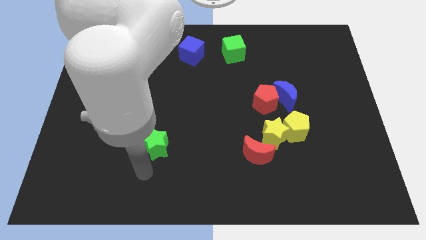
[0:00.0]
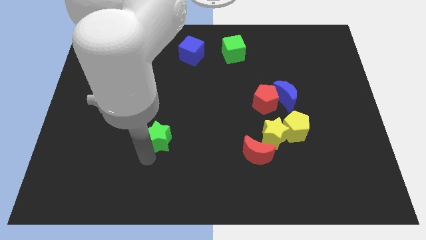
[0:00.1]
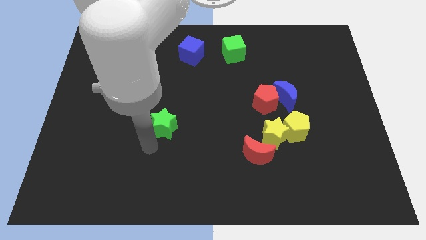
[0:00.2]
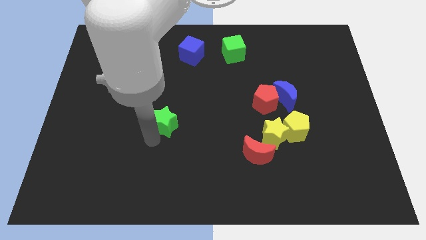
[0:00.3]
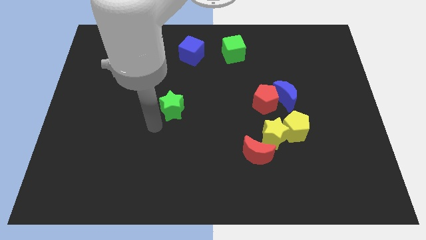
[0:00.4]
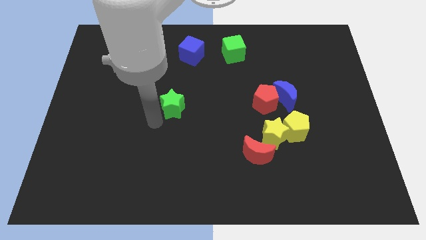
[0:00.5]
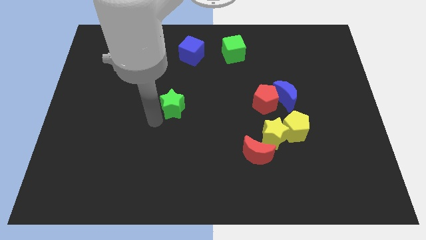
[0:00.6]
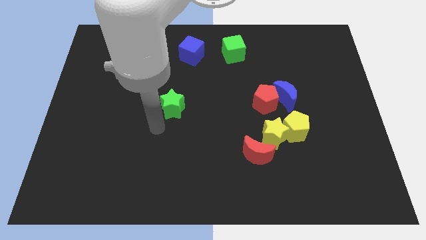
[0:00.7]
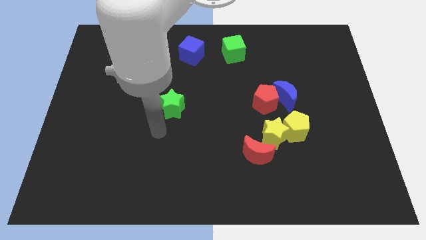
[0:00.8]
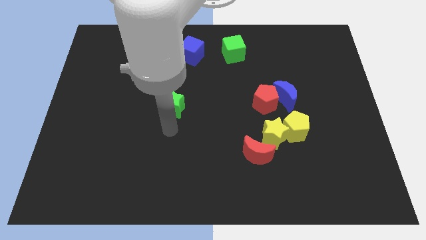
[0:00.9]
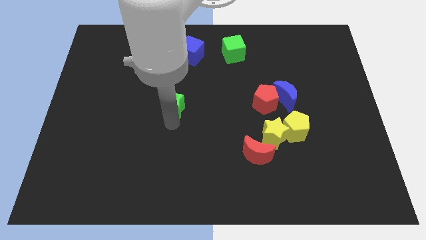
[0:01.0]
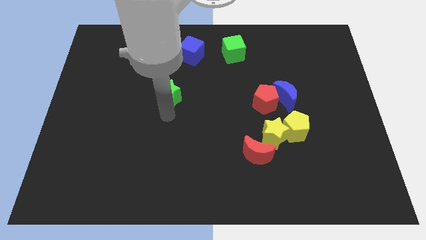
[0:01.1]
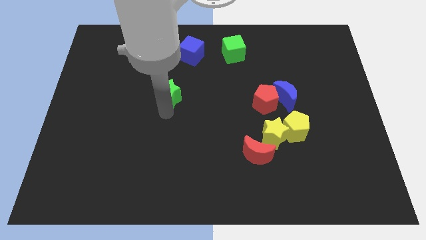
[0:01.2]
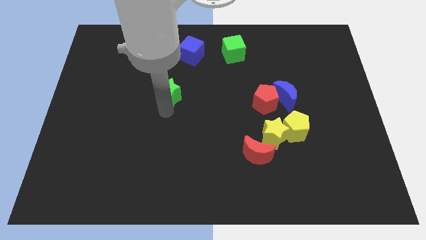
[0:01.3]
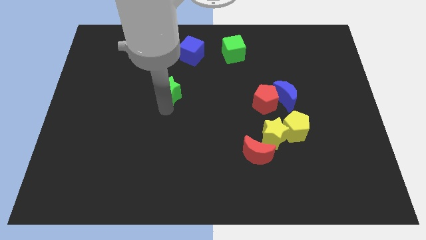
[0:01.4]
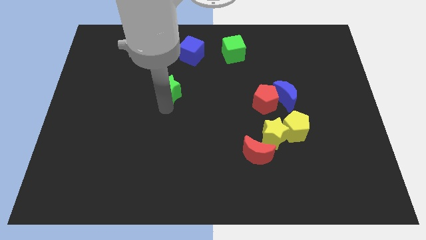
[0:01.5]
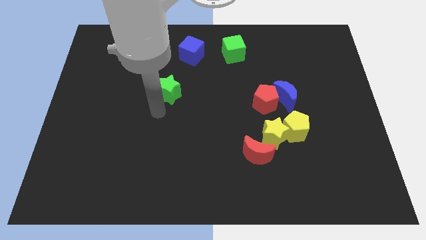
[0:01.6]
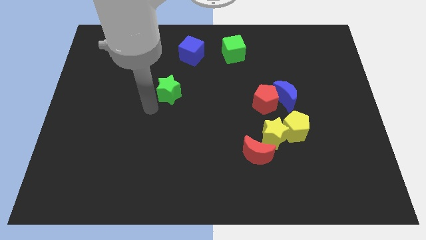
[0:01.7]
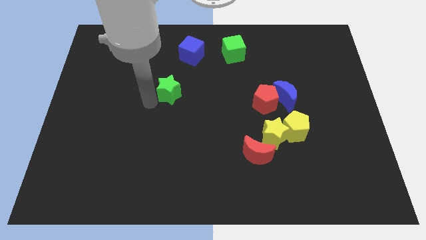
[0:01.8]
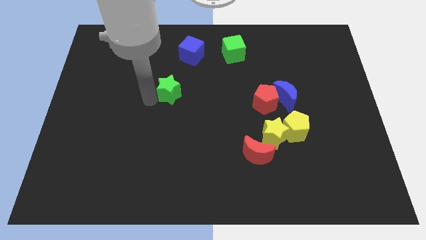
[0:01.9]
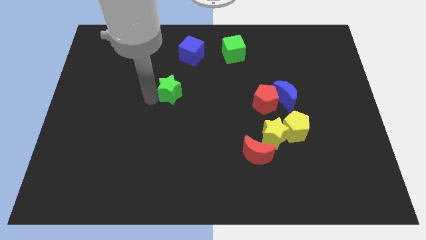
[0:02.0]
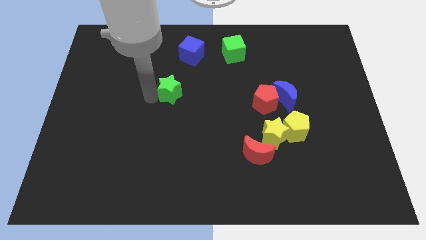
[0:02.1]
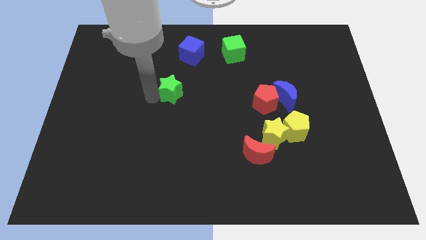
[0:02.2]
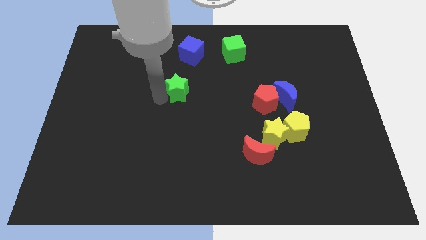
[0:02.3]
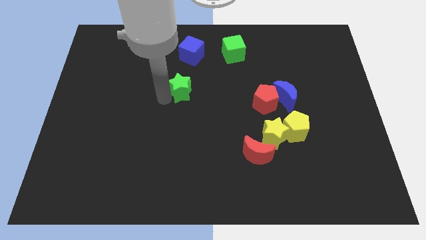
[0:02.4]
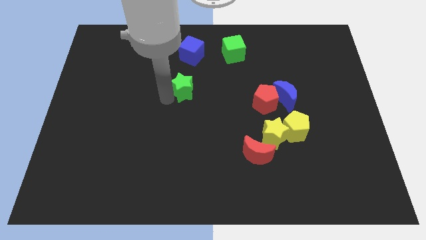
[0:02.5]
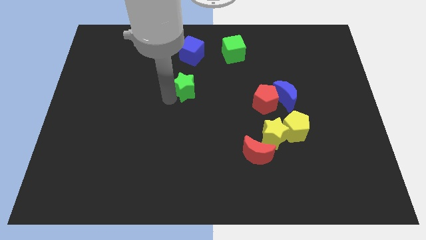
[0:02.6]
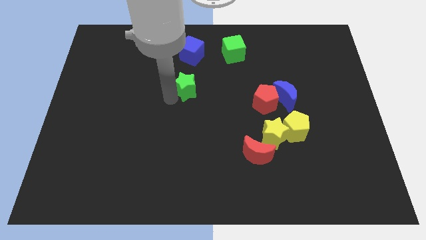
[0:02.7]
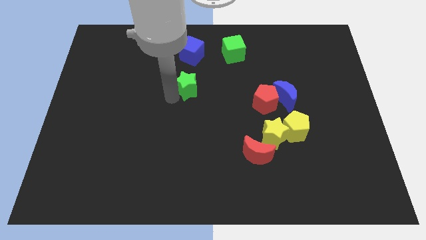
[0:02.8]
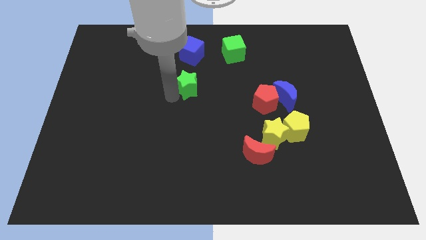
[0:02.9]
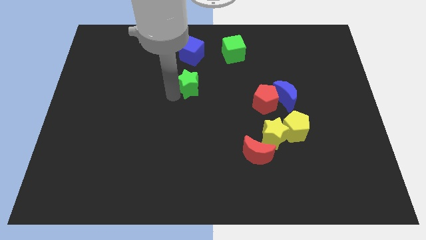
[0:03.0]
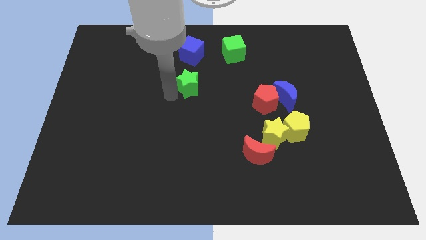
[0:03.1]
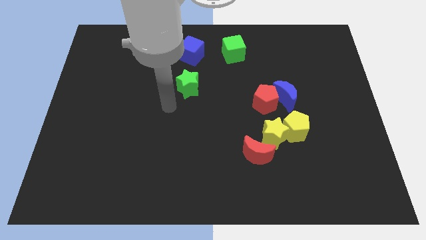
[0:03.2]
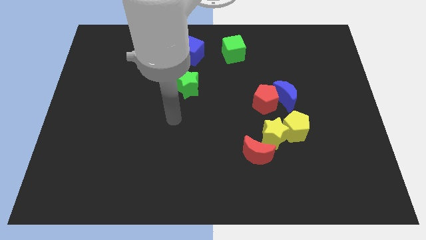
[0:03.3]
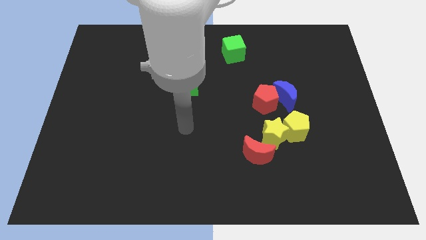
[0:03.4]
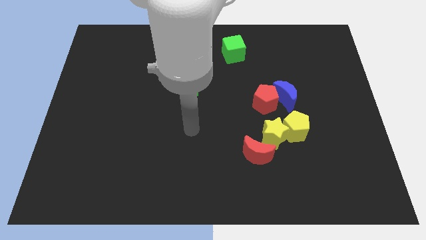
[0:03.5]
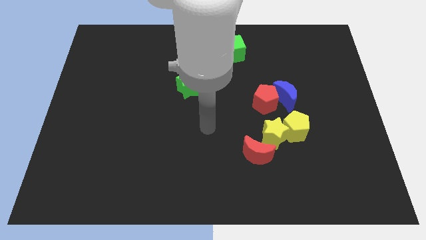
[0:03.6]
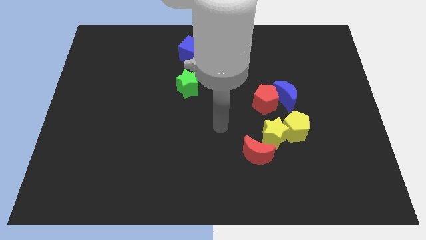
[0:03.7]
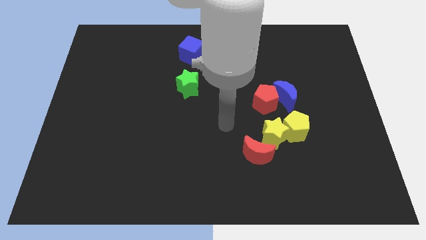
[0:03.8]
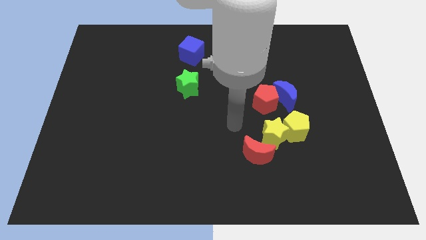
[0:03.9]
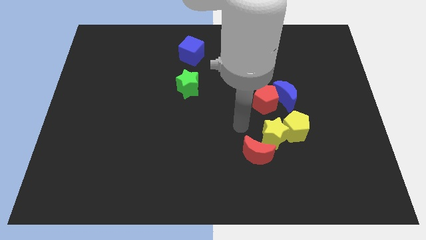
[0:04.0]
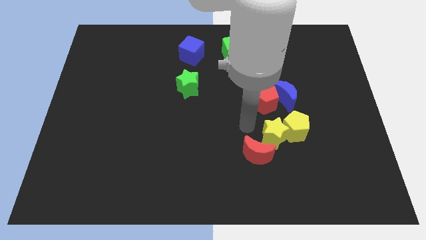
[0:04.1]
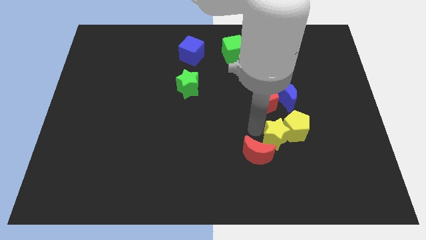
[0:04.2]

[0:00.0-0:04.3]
place the green star below the blue cube

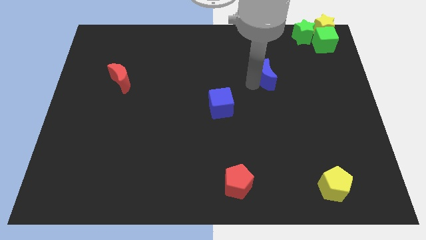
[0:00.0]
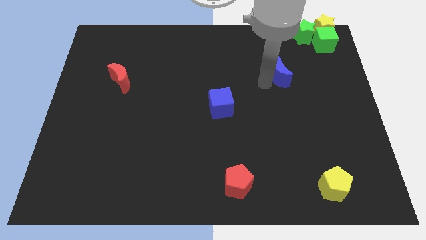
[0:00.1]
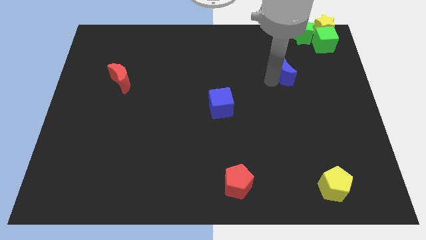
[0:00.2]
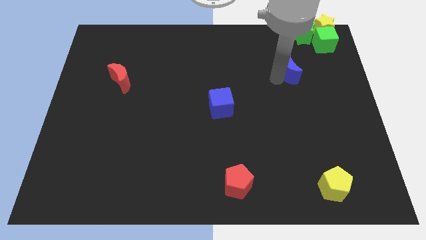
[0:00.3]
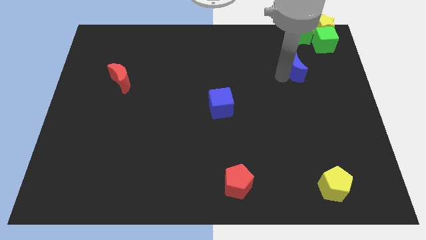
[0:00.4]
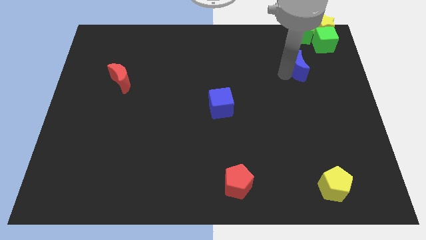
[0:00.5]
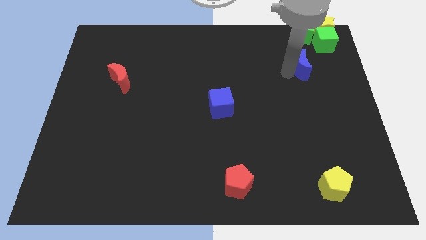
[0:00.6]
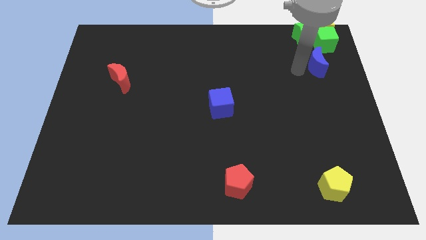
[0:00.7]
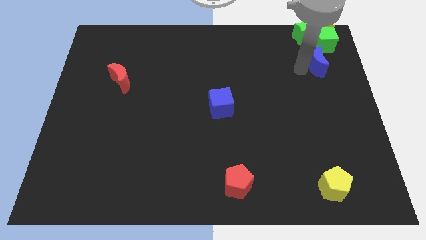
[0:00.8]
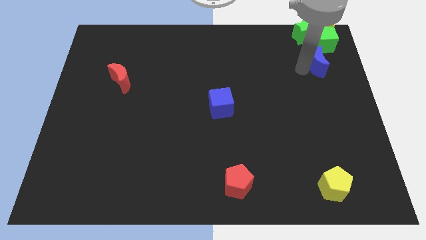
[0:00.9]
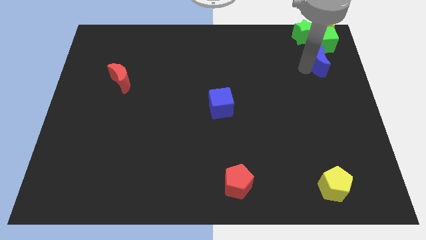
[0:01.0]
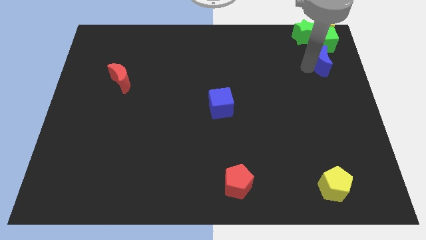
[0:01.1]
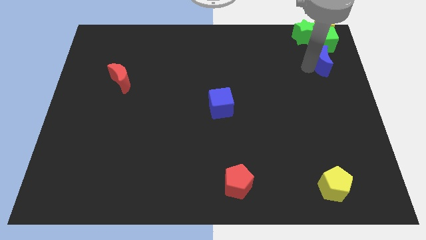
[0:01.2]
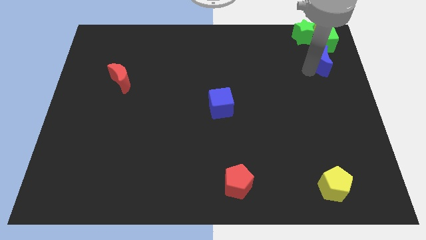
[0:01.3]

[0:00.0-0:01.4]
place blue moon to the bottom of green cube

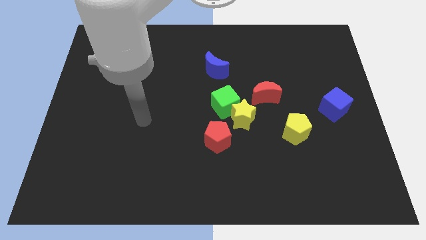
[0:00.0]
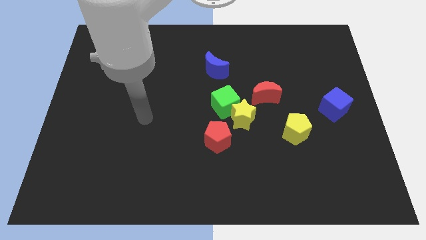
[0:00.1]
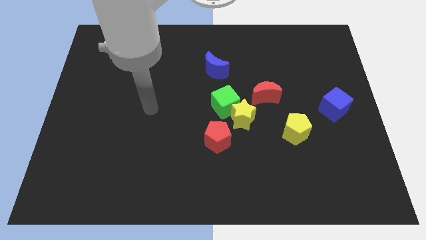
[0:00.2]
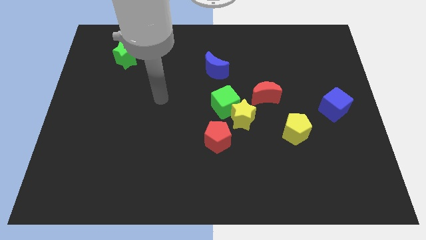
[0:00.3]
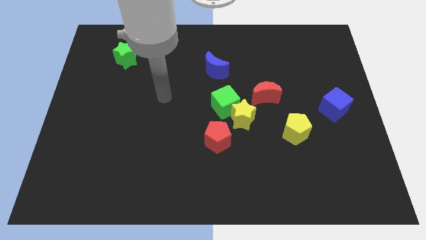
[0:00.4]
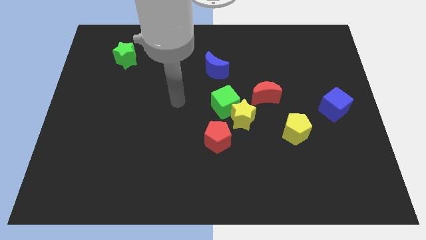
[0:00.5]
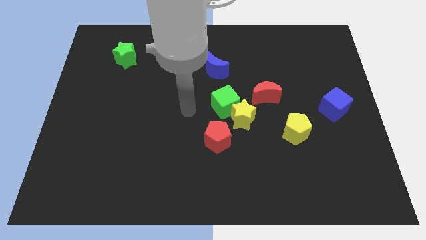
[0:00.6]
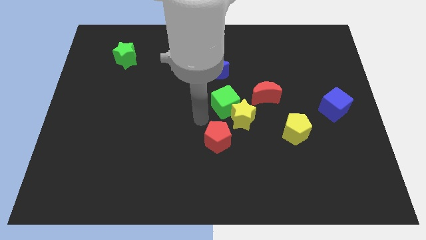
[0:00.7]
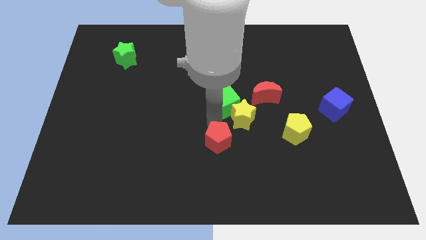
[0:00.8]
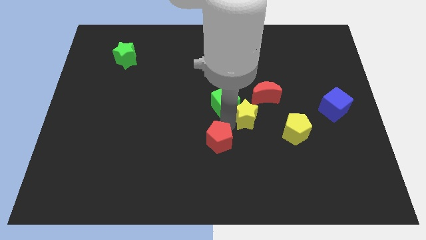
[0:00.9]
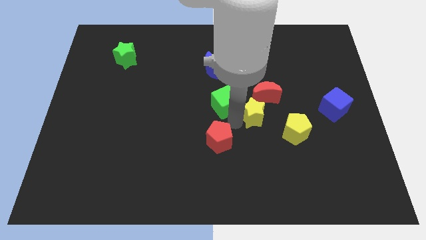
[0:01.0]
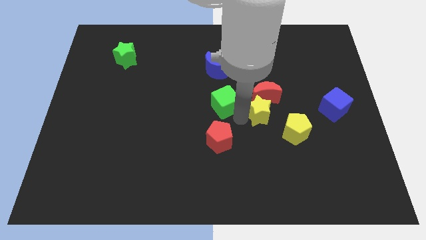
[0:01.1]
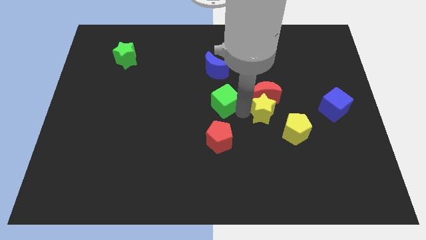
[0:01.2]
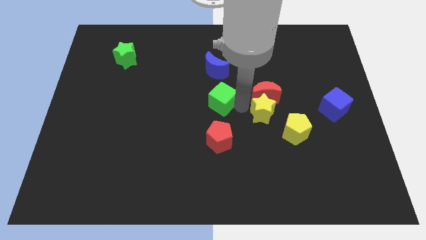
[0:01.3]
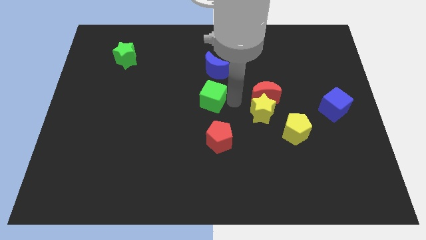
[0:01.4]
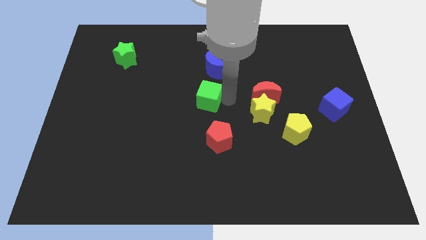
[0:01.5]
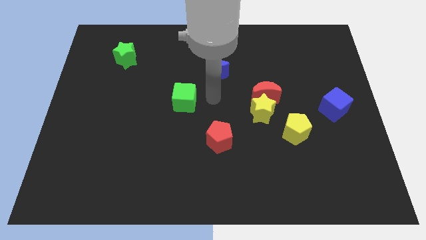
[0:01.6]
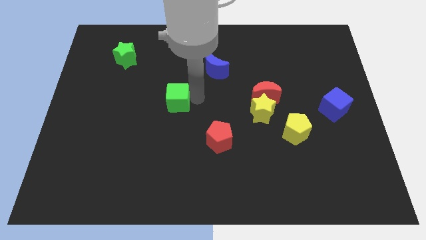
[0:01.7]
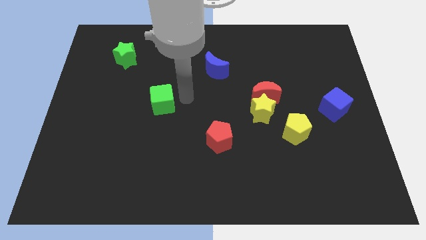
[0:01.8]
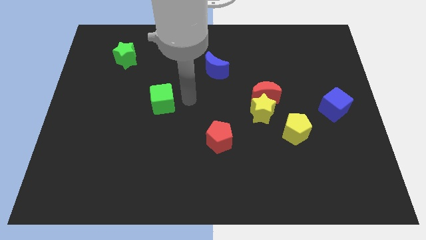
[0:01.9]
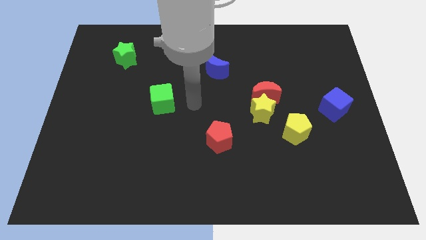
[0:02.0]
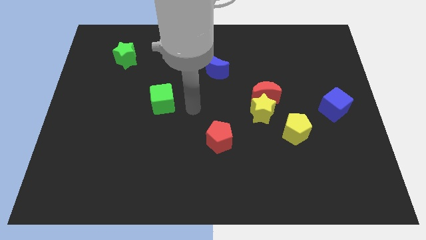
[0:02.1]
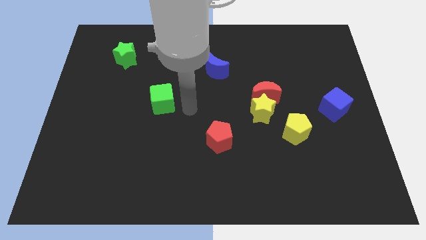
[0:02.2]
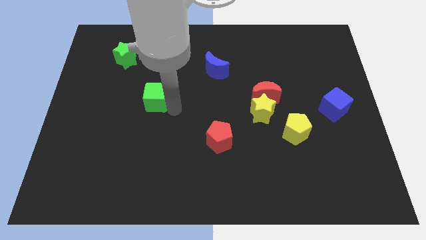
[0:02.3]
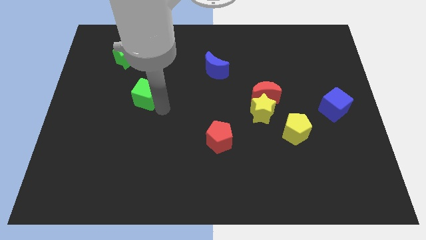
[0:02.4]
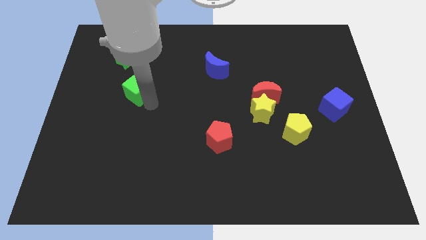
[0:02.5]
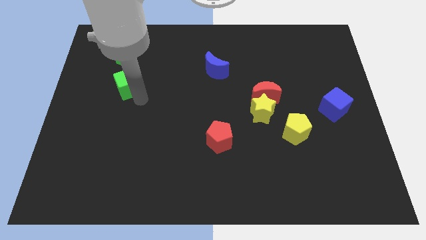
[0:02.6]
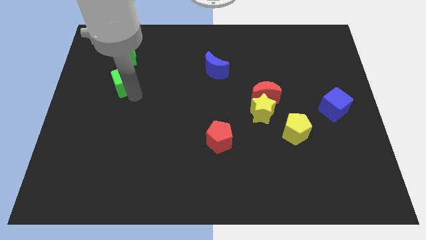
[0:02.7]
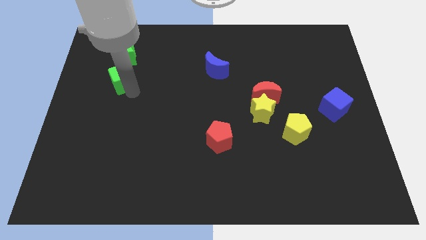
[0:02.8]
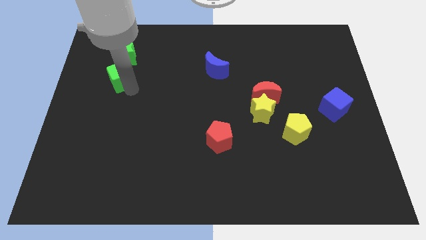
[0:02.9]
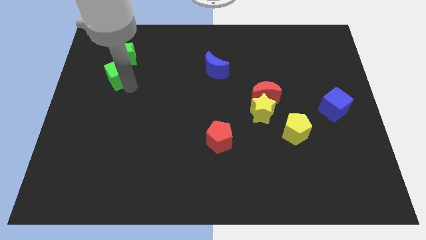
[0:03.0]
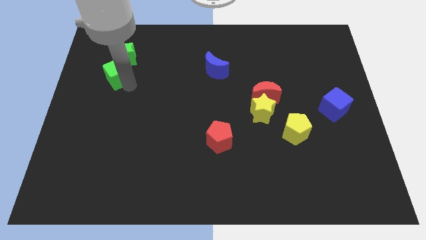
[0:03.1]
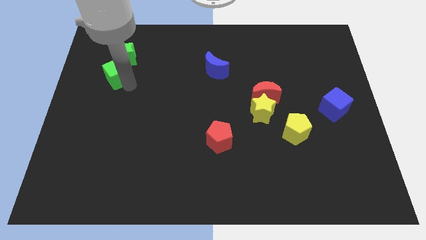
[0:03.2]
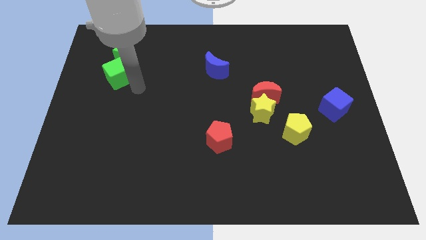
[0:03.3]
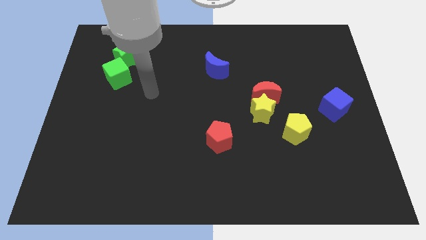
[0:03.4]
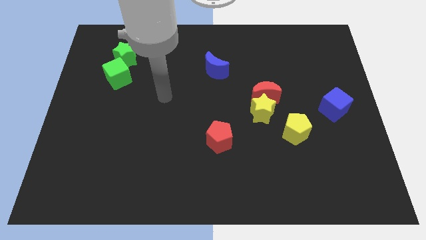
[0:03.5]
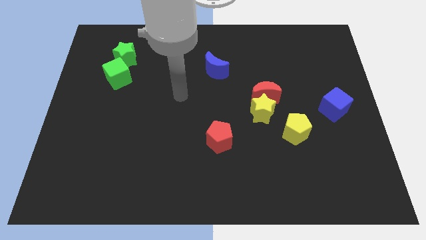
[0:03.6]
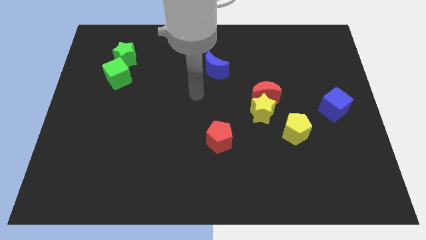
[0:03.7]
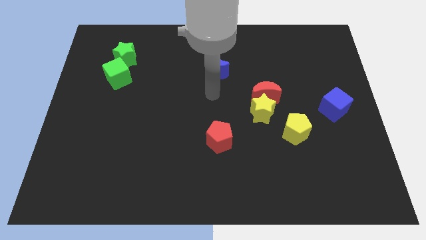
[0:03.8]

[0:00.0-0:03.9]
move the arm away from the green cube
